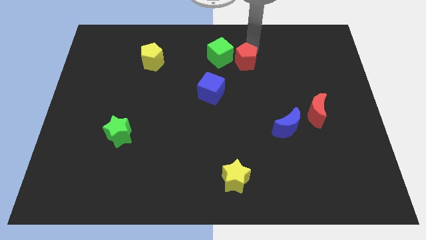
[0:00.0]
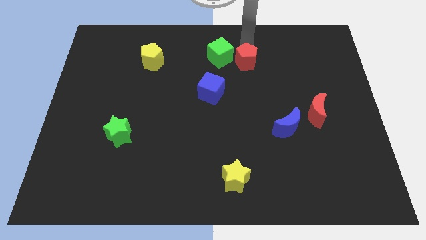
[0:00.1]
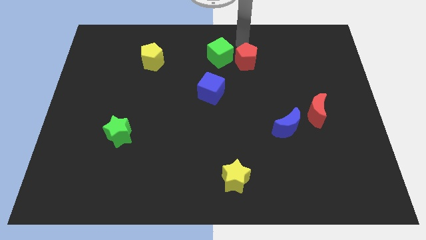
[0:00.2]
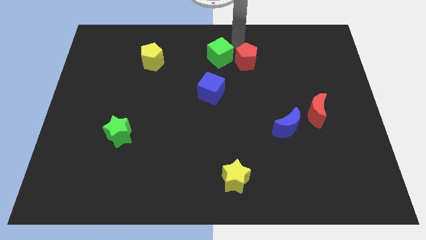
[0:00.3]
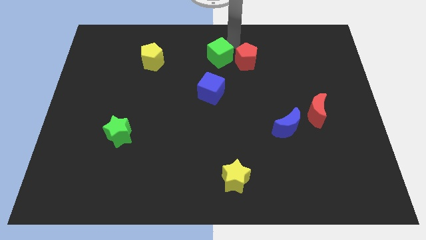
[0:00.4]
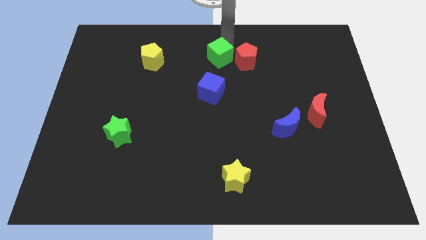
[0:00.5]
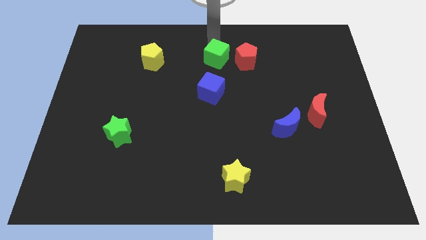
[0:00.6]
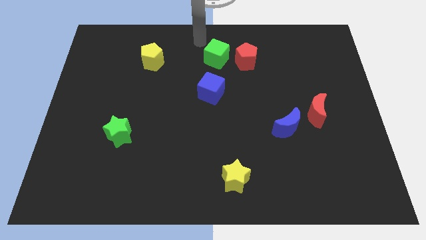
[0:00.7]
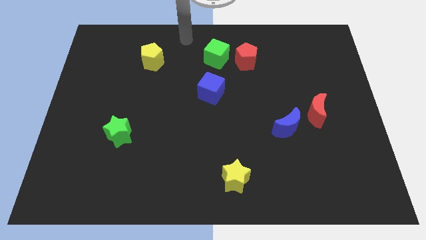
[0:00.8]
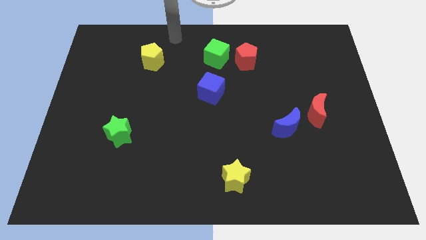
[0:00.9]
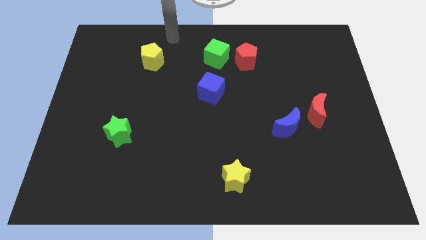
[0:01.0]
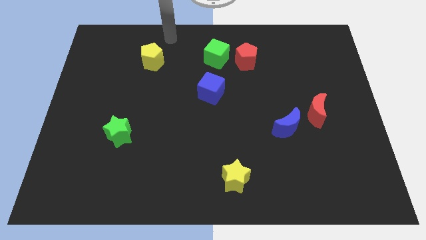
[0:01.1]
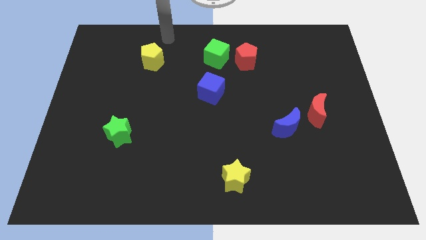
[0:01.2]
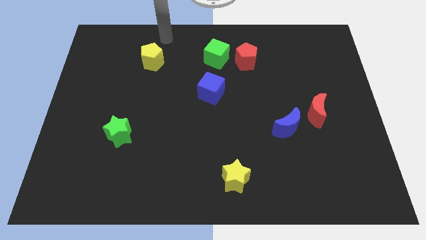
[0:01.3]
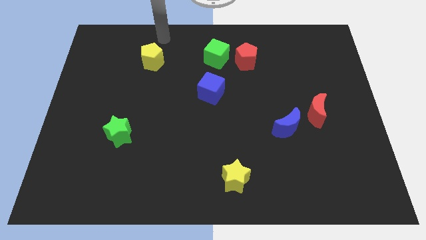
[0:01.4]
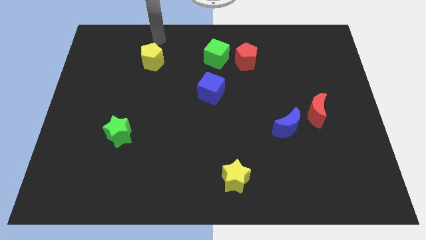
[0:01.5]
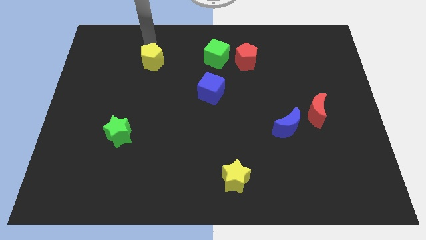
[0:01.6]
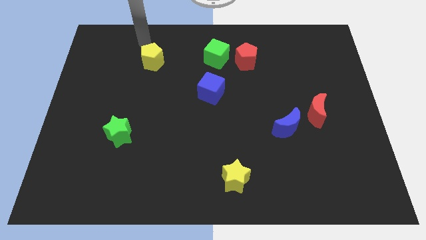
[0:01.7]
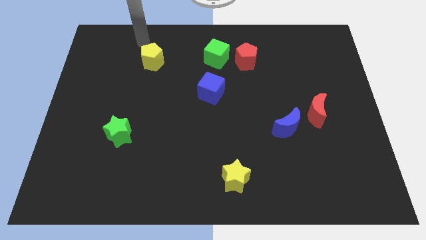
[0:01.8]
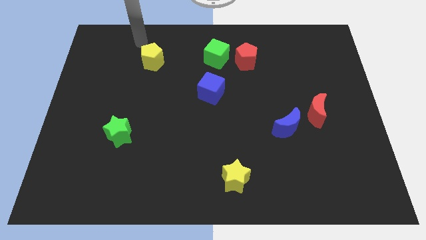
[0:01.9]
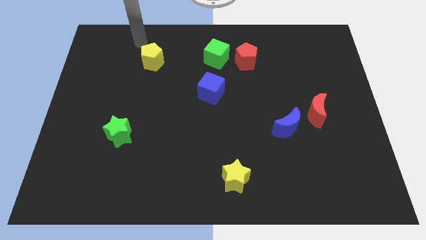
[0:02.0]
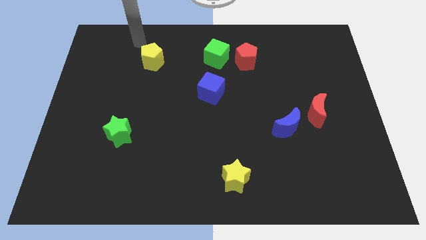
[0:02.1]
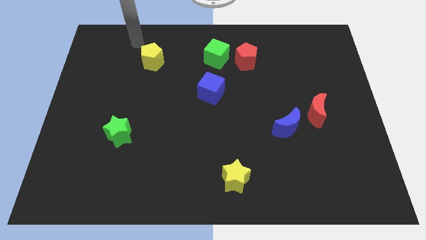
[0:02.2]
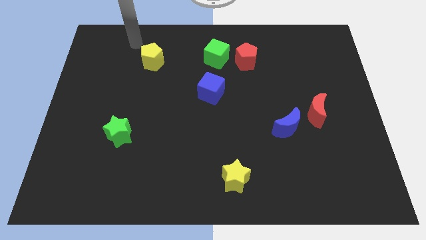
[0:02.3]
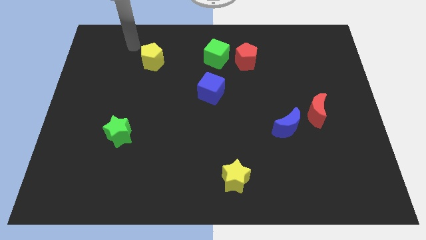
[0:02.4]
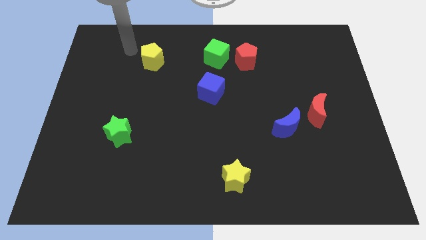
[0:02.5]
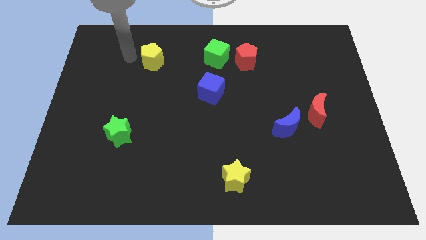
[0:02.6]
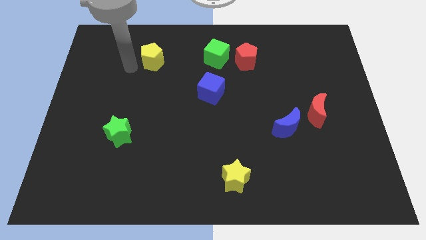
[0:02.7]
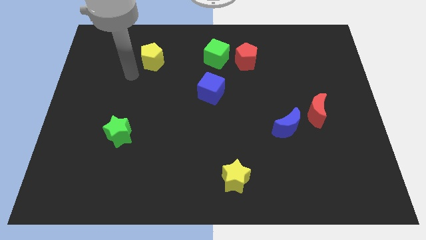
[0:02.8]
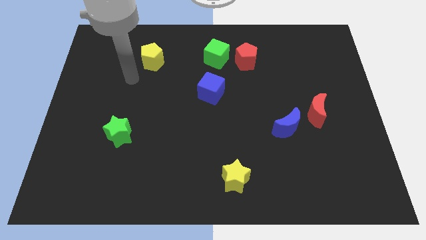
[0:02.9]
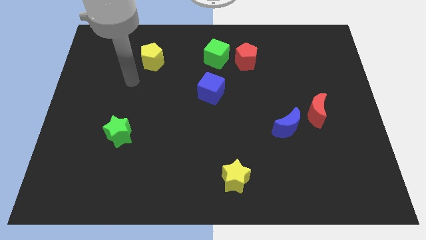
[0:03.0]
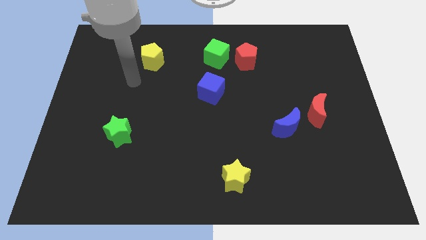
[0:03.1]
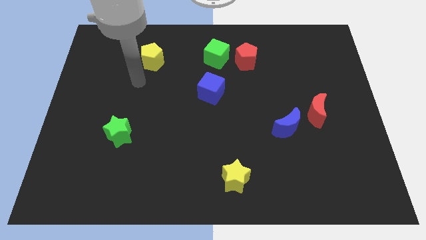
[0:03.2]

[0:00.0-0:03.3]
move your arm away from the red pentagon

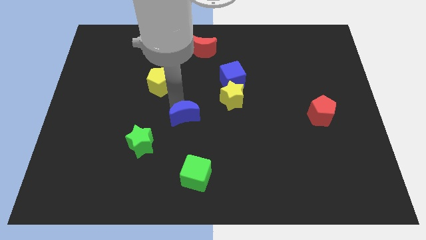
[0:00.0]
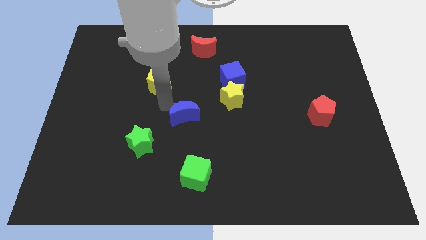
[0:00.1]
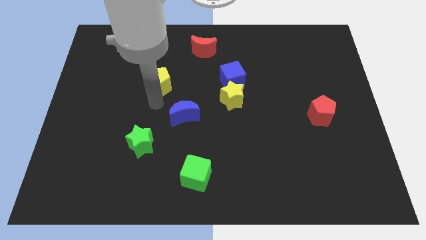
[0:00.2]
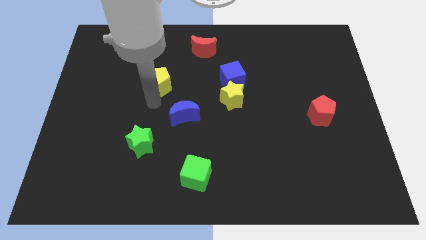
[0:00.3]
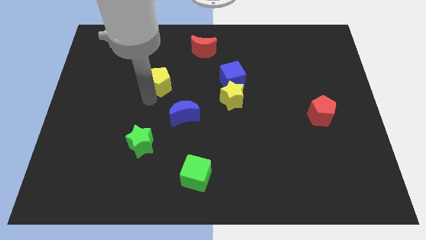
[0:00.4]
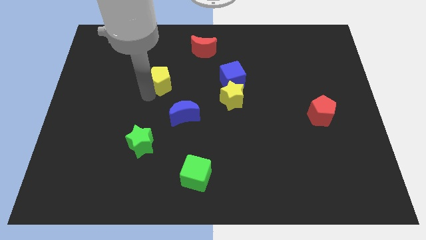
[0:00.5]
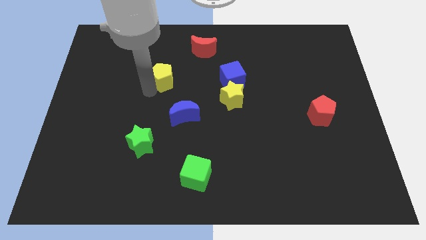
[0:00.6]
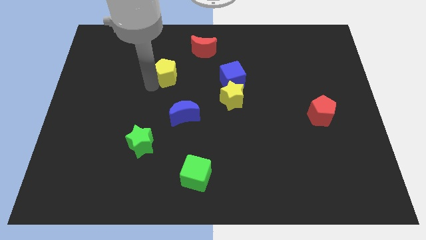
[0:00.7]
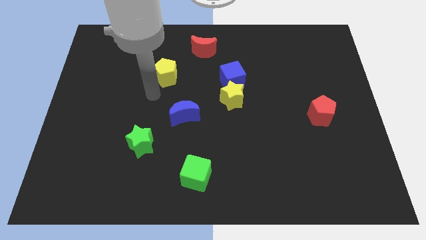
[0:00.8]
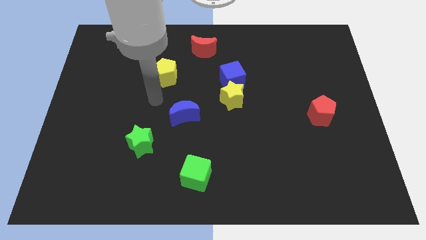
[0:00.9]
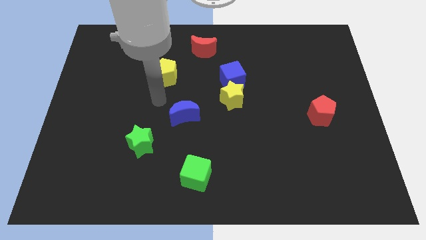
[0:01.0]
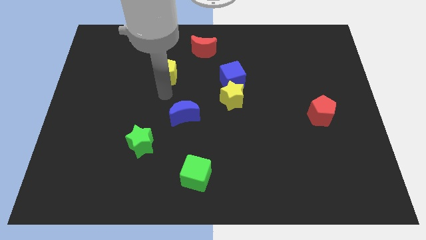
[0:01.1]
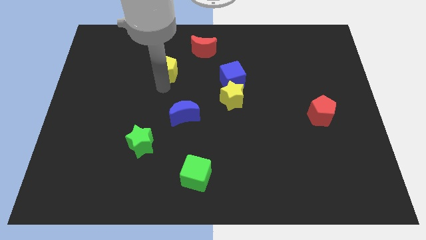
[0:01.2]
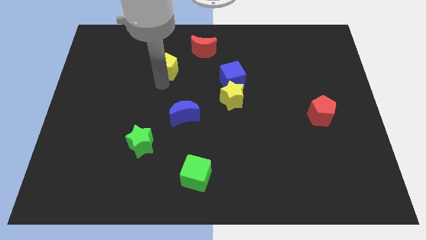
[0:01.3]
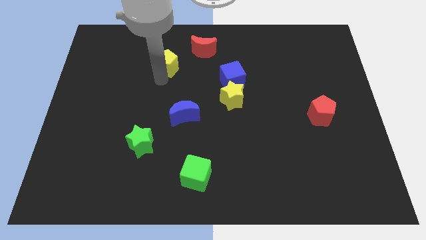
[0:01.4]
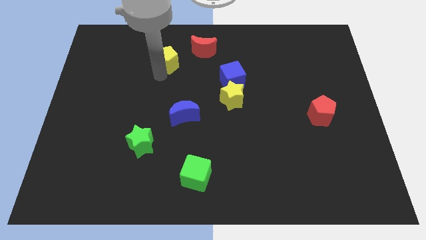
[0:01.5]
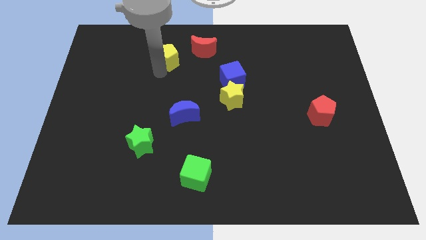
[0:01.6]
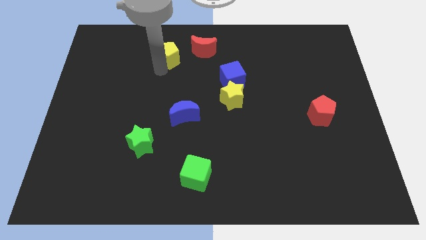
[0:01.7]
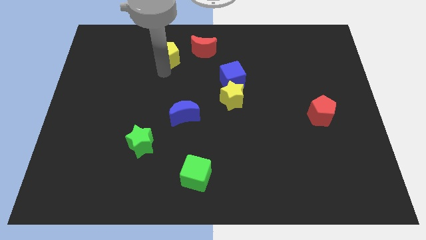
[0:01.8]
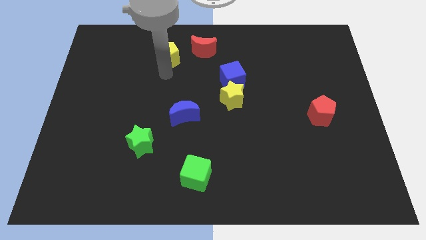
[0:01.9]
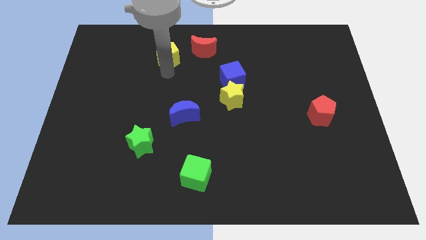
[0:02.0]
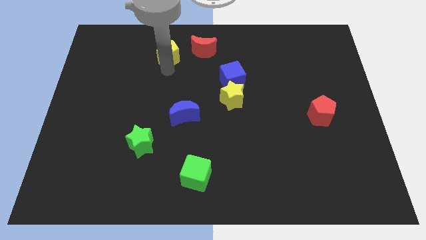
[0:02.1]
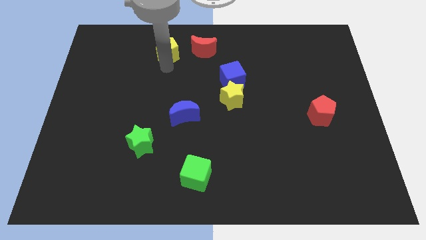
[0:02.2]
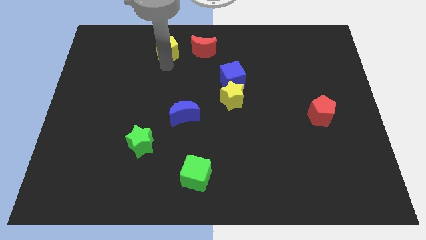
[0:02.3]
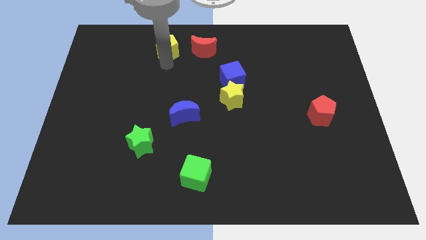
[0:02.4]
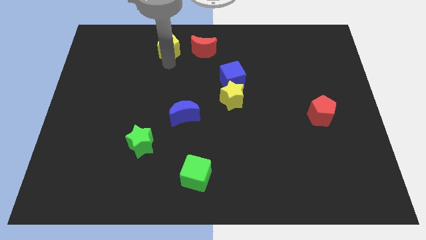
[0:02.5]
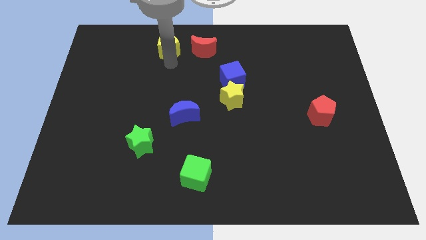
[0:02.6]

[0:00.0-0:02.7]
move the yellow pentagon to the left of the red crescent

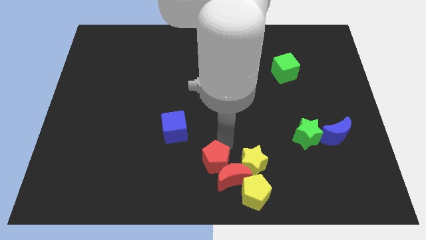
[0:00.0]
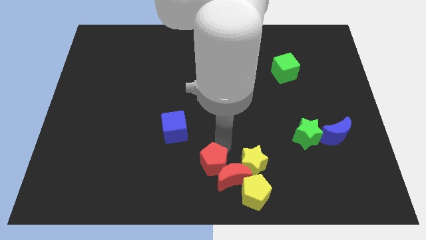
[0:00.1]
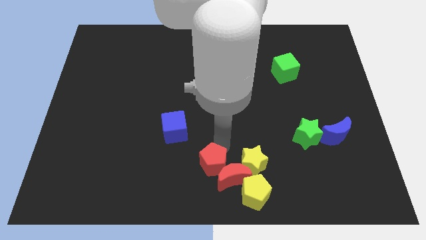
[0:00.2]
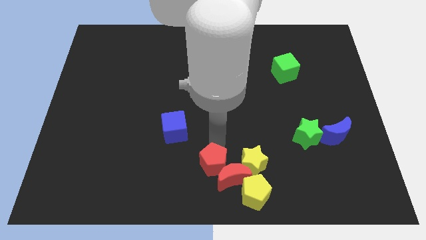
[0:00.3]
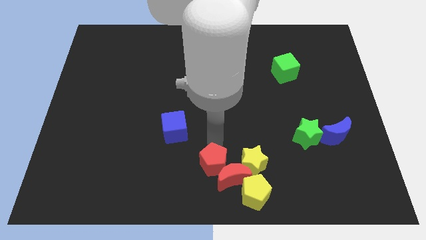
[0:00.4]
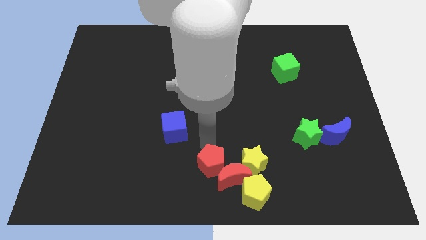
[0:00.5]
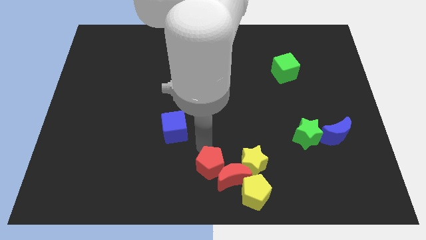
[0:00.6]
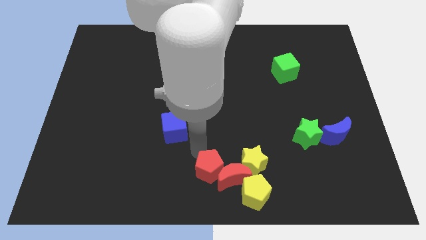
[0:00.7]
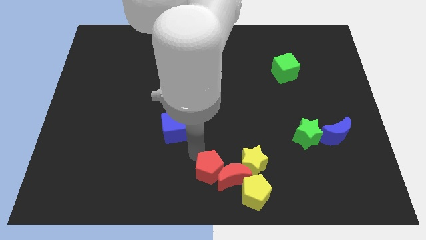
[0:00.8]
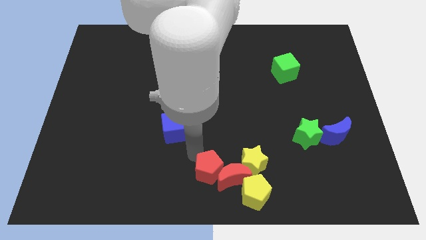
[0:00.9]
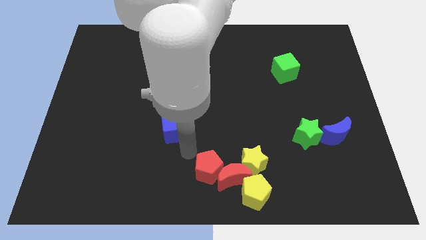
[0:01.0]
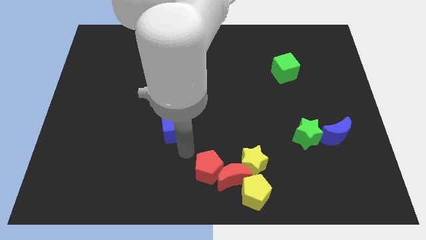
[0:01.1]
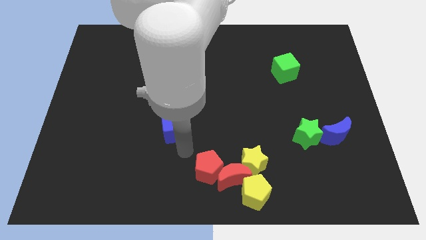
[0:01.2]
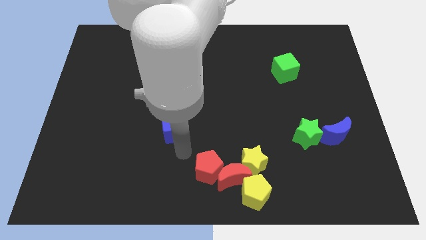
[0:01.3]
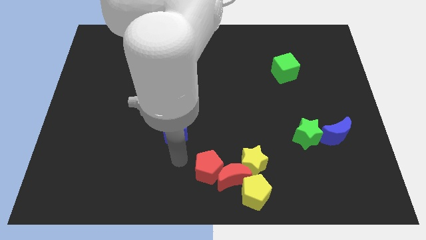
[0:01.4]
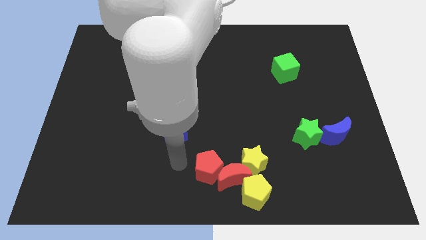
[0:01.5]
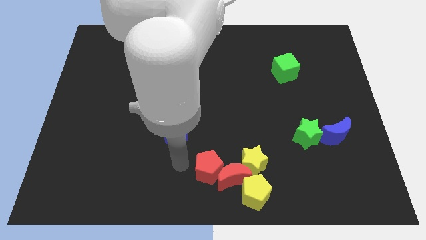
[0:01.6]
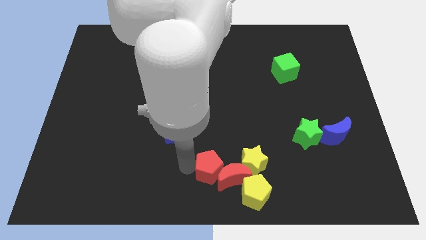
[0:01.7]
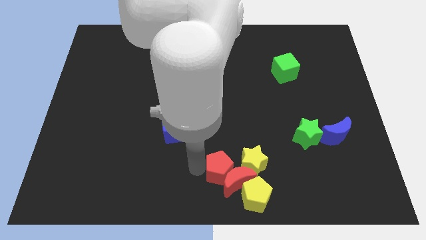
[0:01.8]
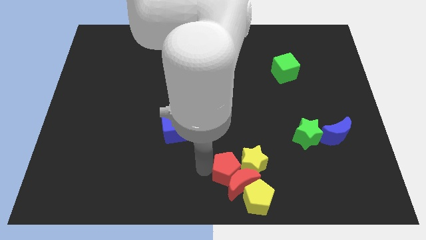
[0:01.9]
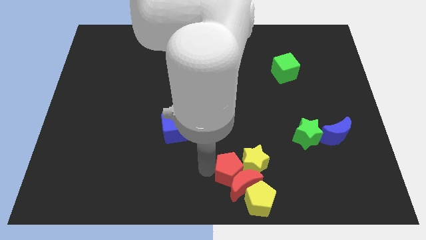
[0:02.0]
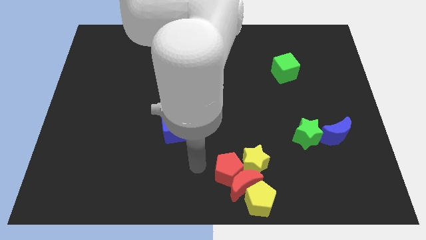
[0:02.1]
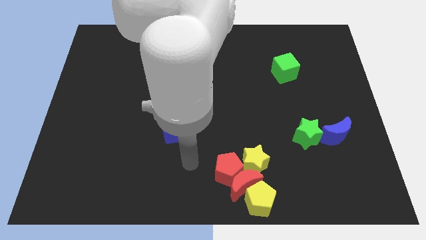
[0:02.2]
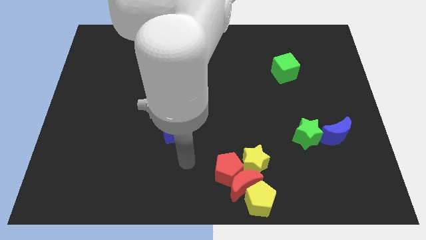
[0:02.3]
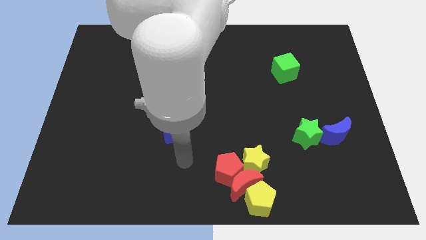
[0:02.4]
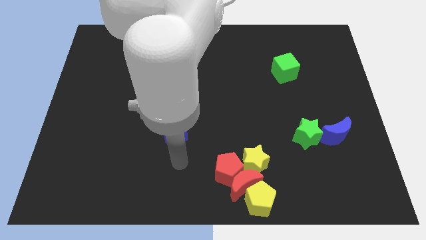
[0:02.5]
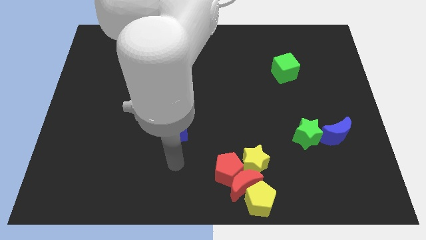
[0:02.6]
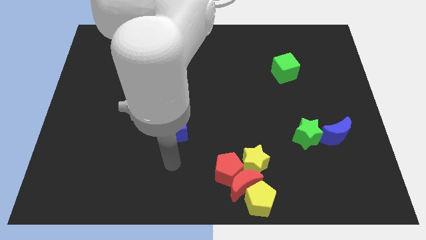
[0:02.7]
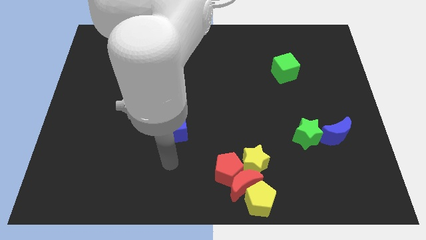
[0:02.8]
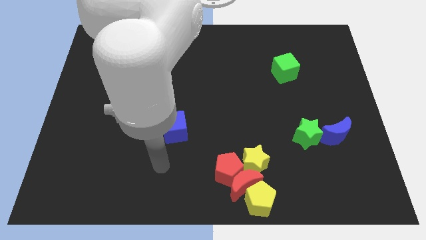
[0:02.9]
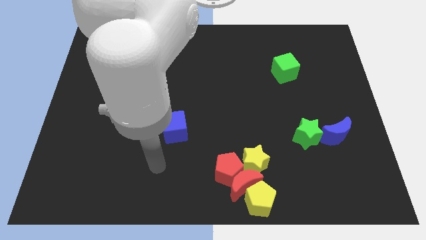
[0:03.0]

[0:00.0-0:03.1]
move the red pentagon into red crescent
